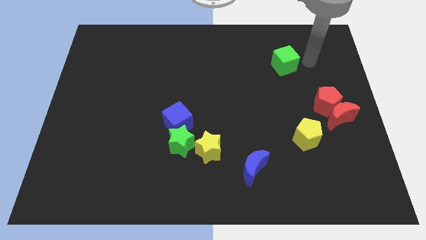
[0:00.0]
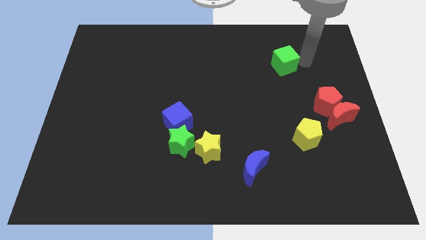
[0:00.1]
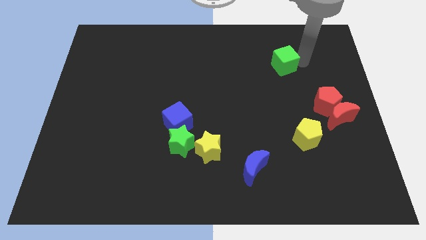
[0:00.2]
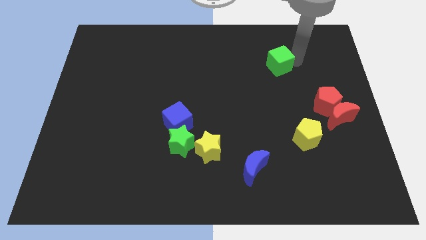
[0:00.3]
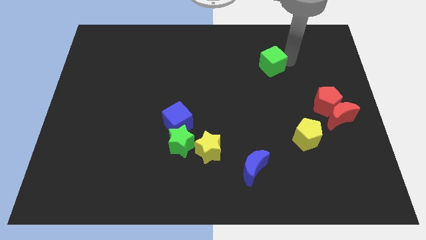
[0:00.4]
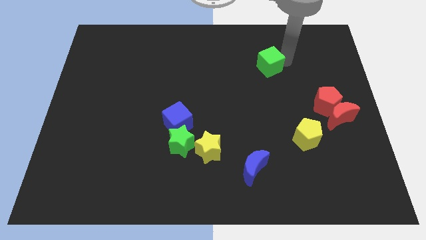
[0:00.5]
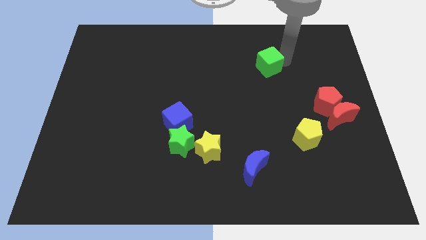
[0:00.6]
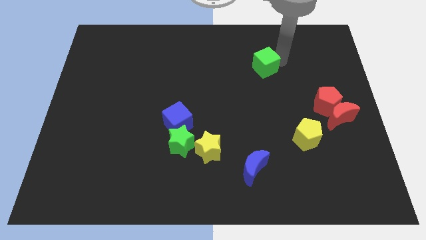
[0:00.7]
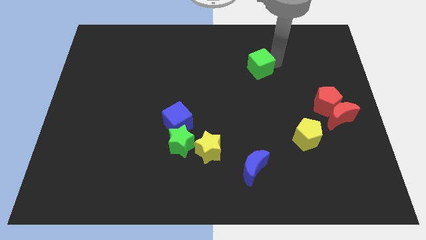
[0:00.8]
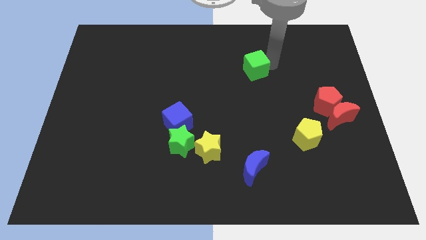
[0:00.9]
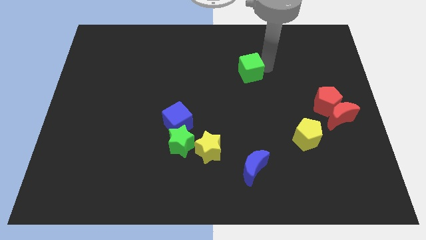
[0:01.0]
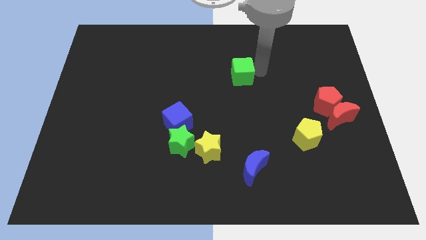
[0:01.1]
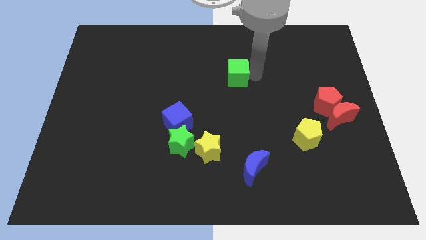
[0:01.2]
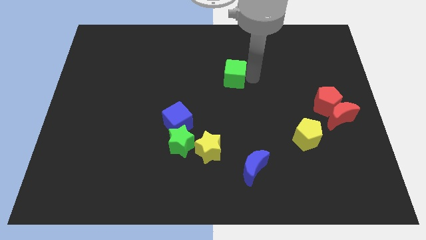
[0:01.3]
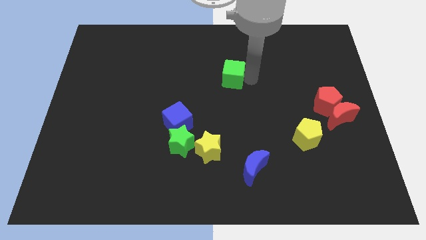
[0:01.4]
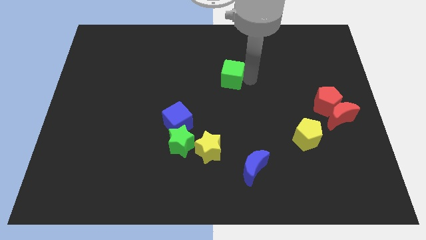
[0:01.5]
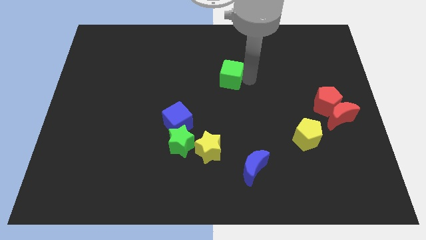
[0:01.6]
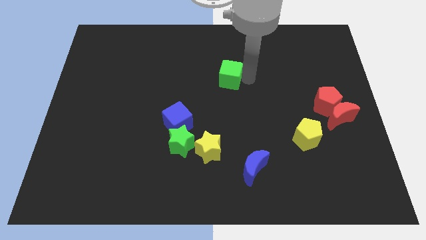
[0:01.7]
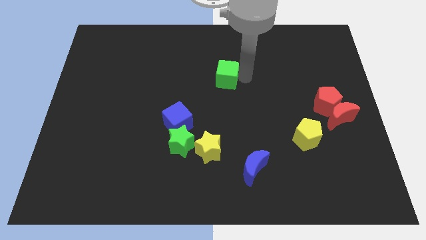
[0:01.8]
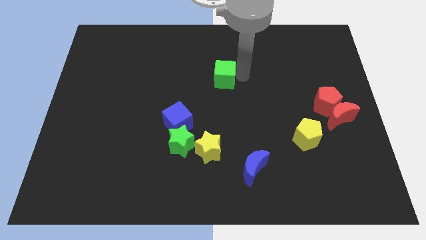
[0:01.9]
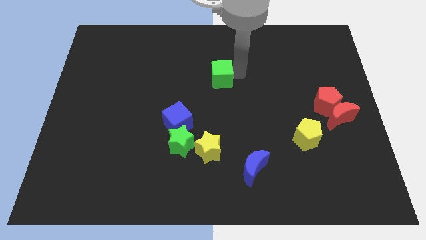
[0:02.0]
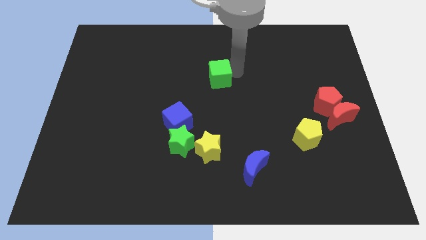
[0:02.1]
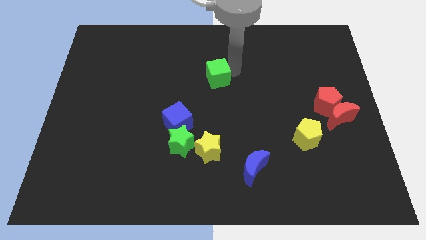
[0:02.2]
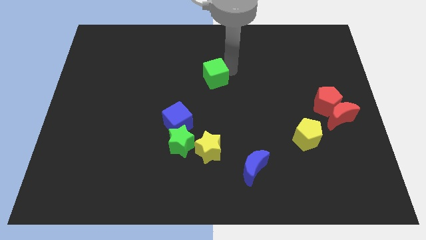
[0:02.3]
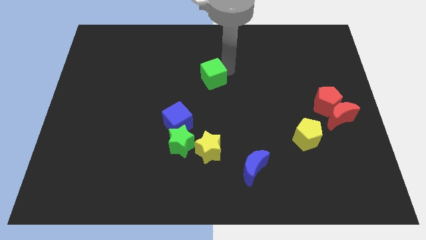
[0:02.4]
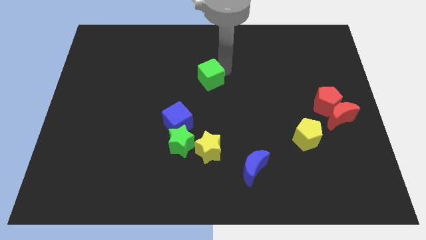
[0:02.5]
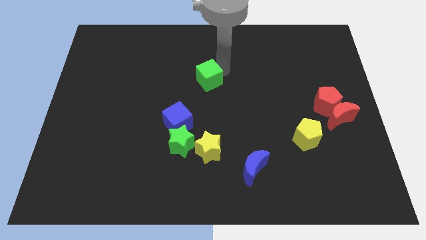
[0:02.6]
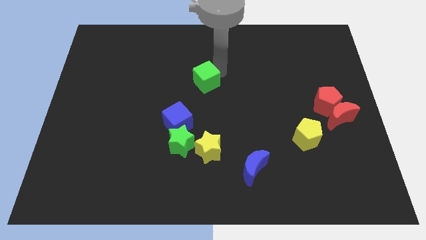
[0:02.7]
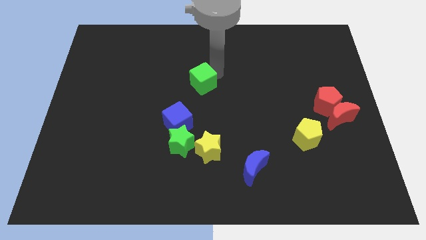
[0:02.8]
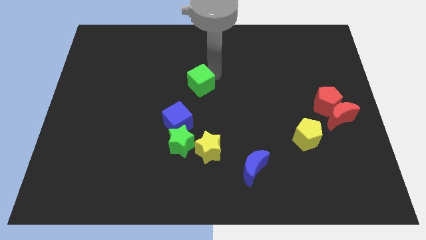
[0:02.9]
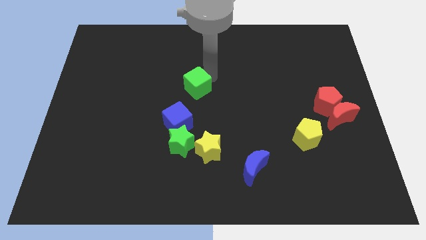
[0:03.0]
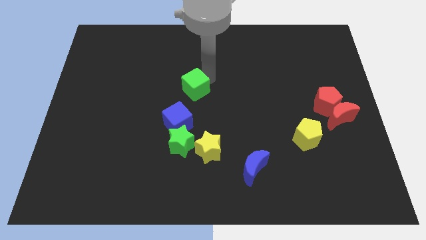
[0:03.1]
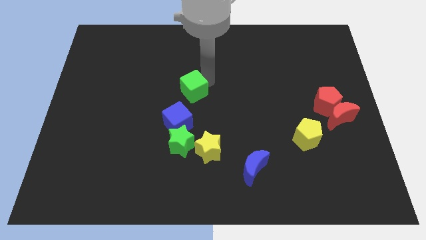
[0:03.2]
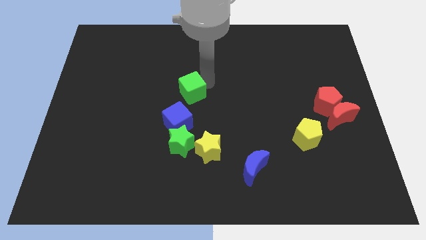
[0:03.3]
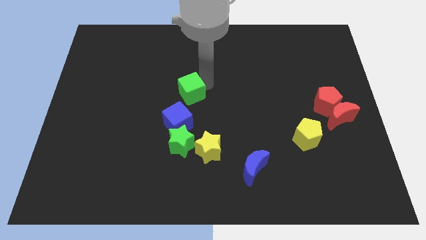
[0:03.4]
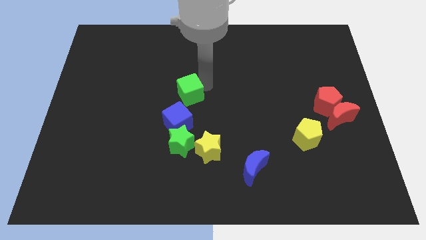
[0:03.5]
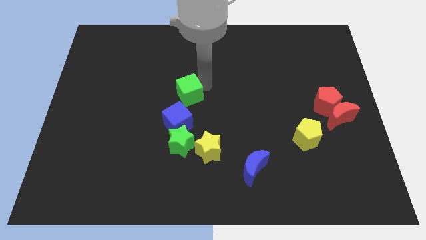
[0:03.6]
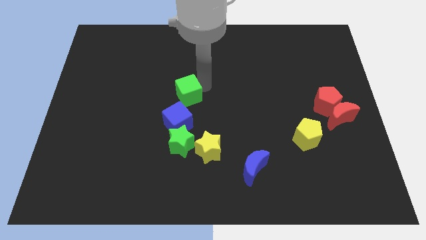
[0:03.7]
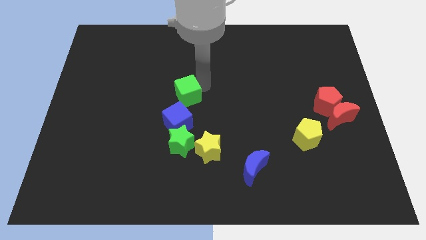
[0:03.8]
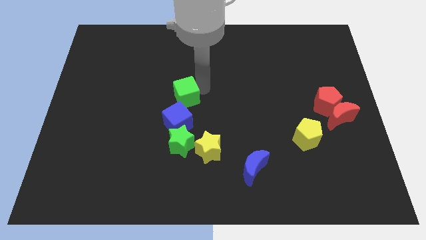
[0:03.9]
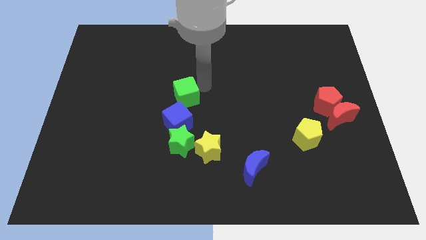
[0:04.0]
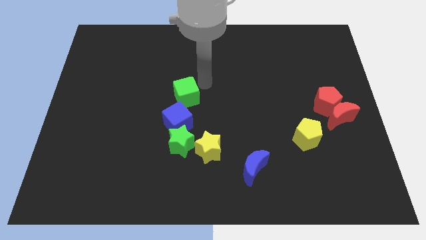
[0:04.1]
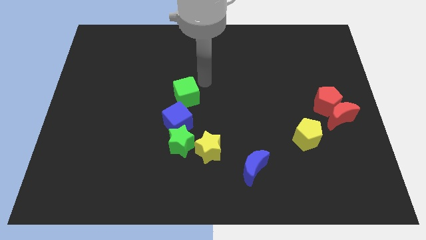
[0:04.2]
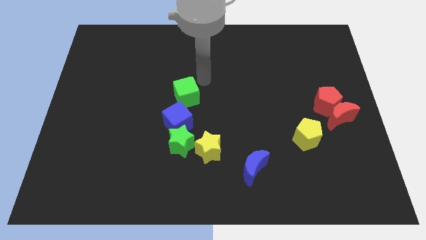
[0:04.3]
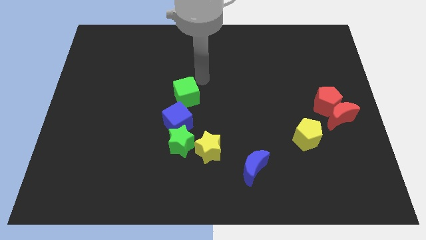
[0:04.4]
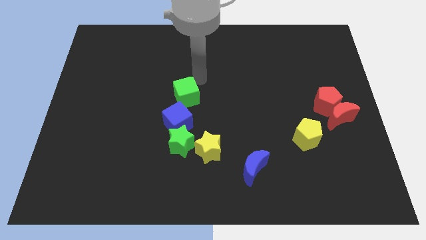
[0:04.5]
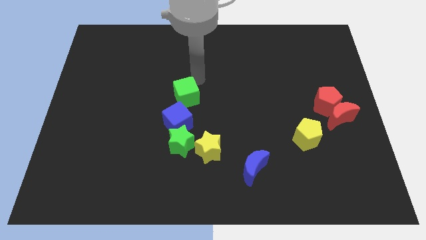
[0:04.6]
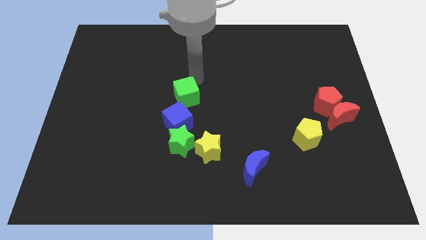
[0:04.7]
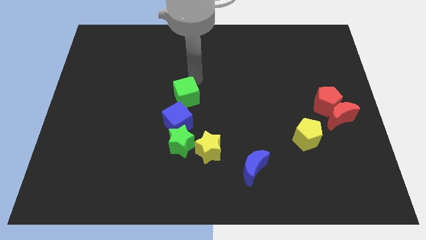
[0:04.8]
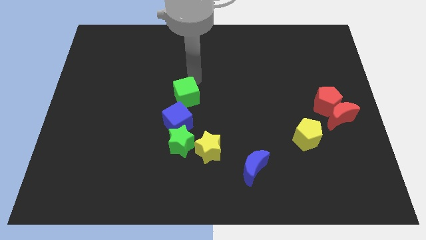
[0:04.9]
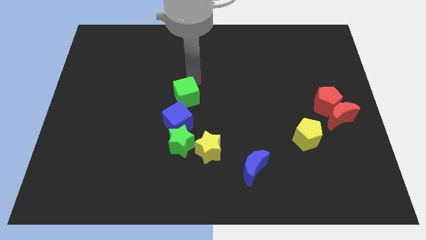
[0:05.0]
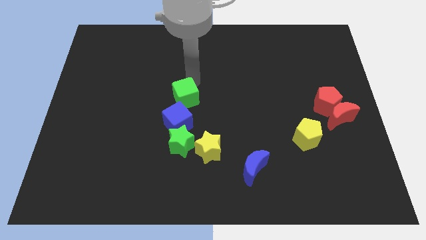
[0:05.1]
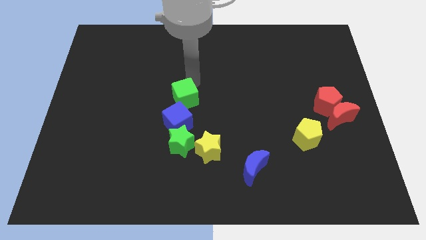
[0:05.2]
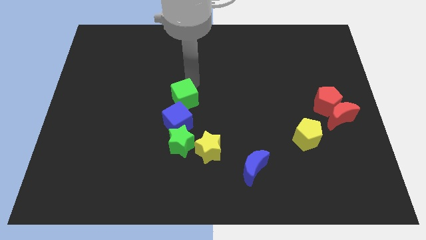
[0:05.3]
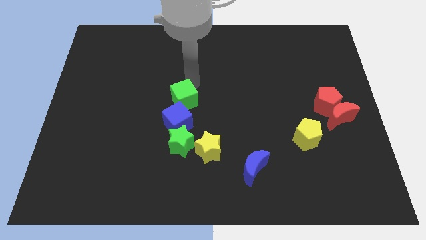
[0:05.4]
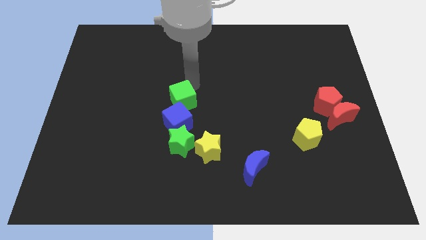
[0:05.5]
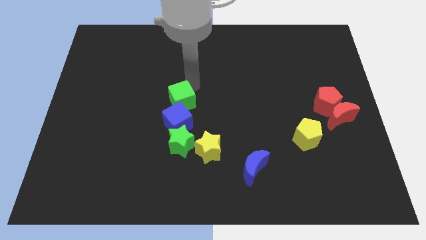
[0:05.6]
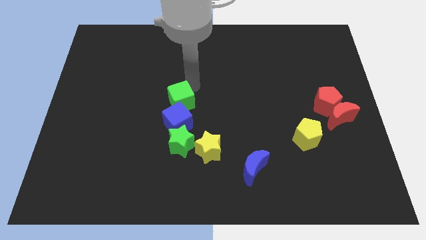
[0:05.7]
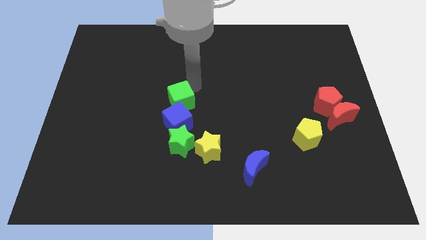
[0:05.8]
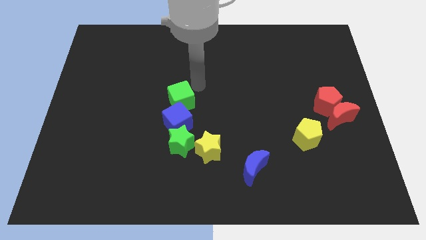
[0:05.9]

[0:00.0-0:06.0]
push the green cube to the top of the blue cube

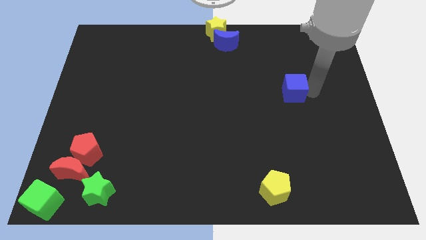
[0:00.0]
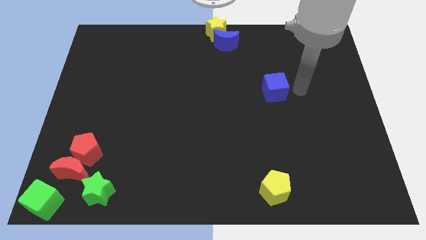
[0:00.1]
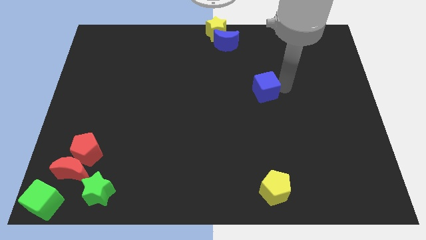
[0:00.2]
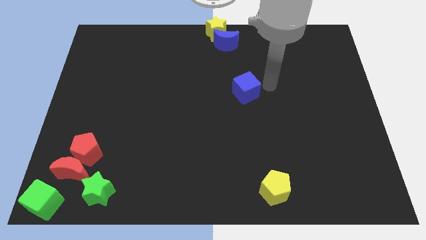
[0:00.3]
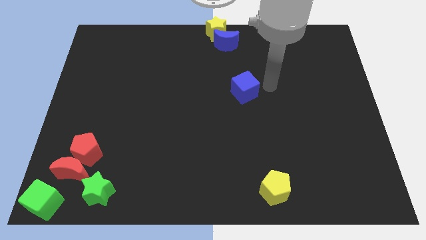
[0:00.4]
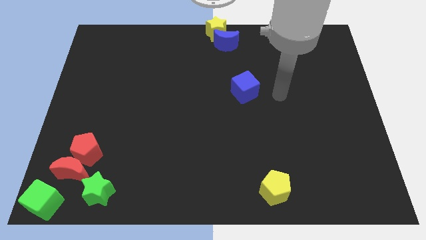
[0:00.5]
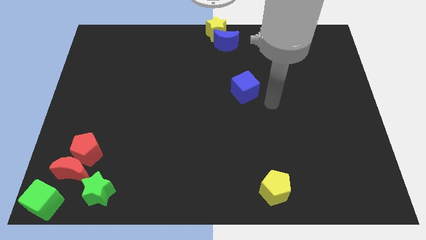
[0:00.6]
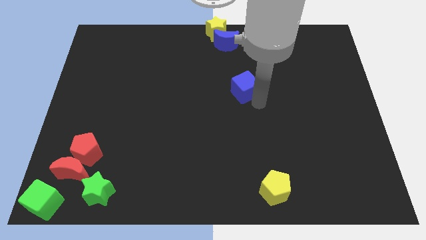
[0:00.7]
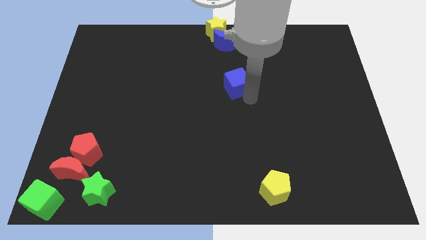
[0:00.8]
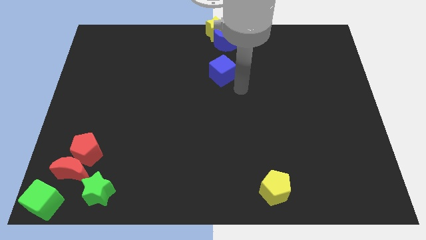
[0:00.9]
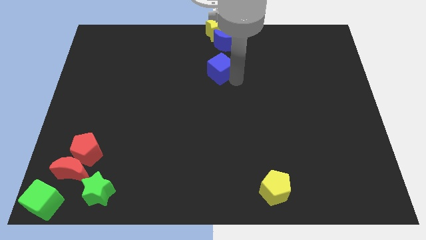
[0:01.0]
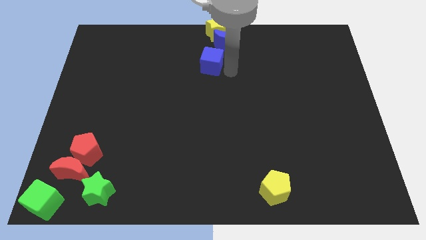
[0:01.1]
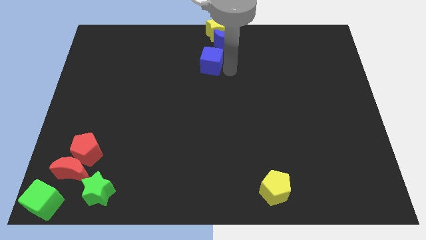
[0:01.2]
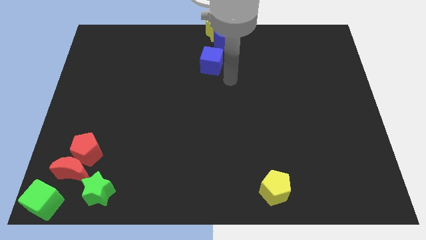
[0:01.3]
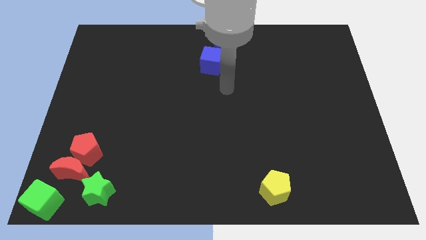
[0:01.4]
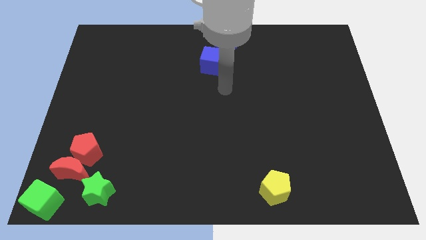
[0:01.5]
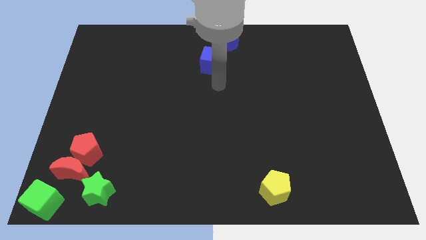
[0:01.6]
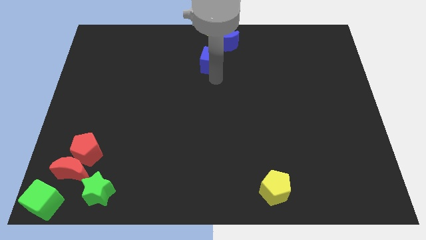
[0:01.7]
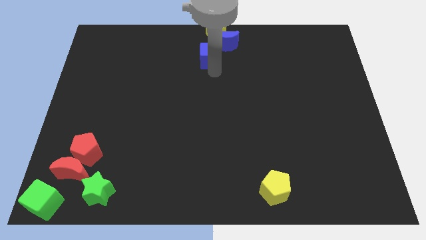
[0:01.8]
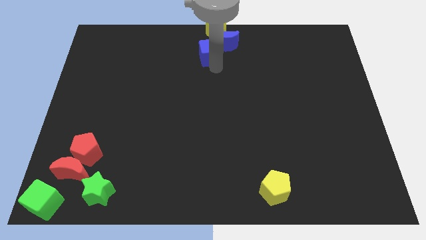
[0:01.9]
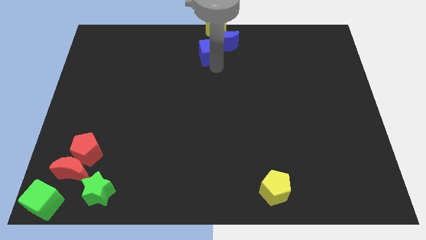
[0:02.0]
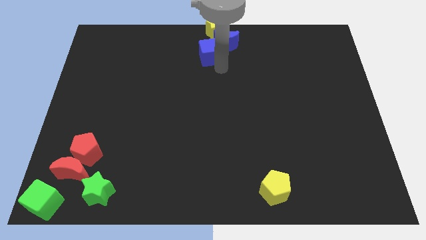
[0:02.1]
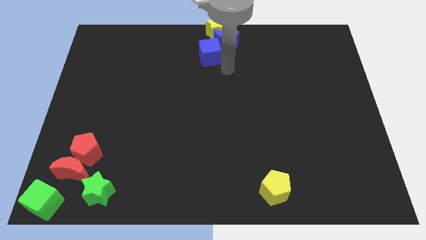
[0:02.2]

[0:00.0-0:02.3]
move the blue cube close to the blue moon

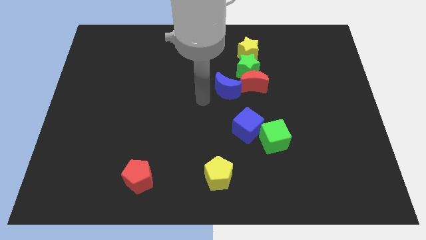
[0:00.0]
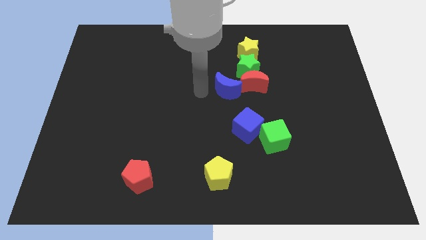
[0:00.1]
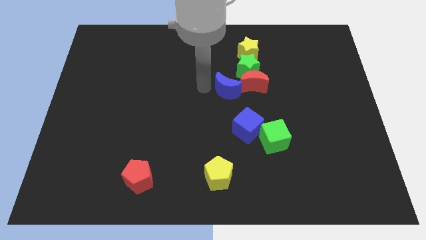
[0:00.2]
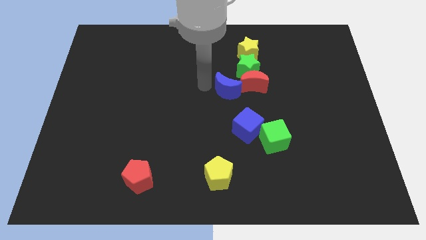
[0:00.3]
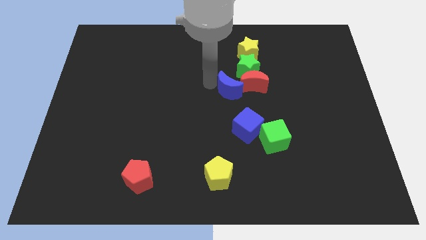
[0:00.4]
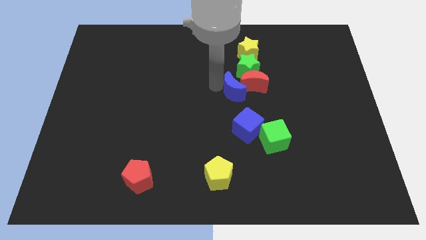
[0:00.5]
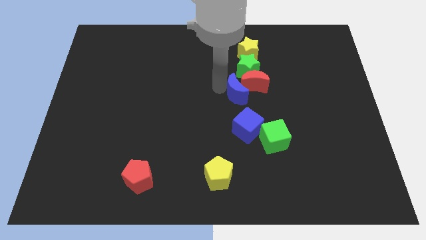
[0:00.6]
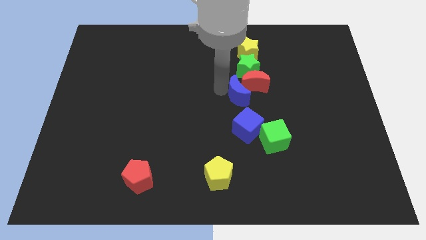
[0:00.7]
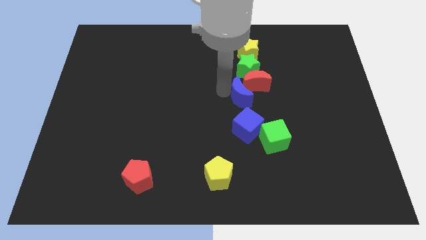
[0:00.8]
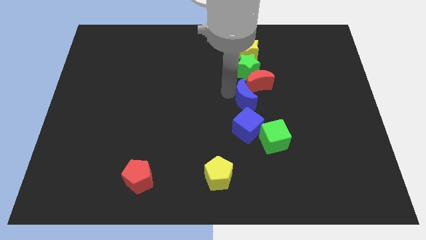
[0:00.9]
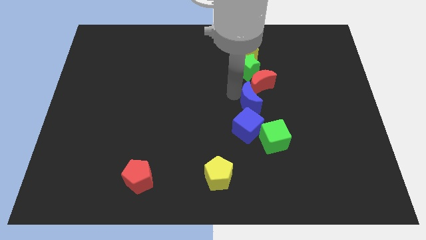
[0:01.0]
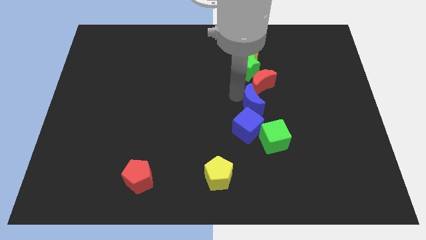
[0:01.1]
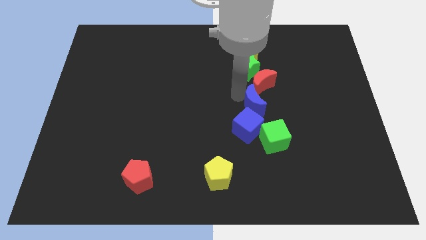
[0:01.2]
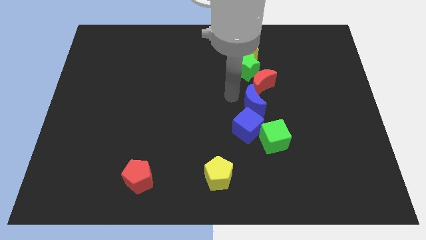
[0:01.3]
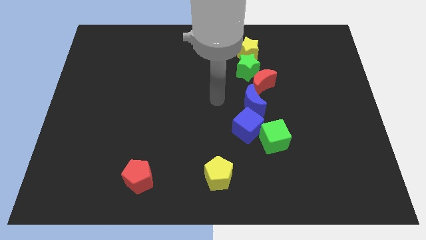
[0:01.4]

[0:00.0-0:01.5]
push the blue moon to the bottom left side of the red moon
